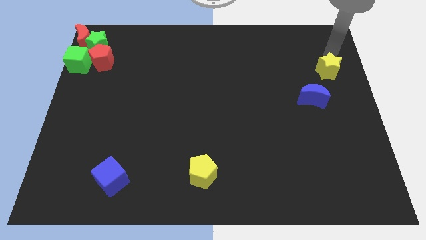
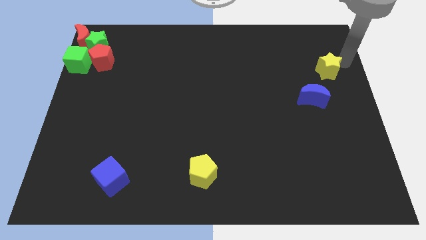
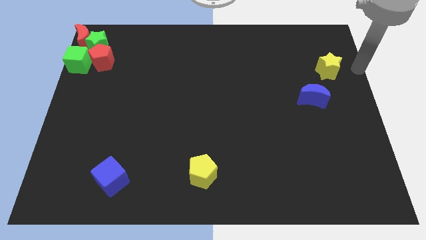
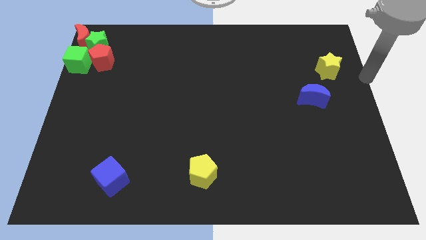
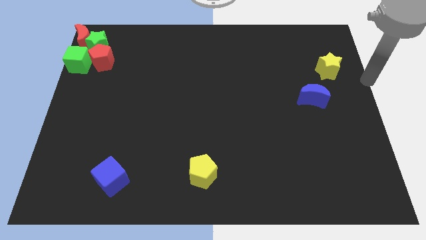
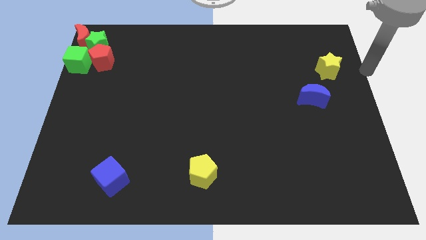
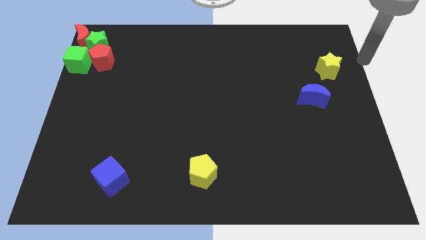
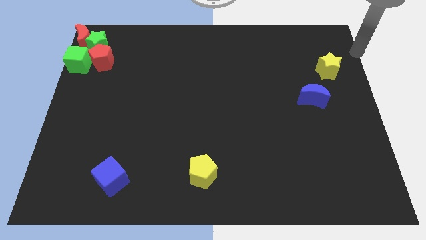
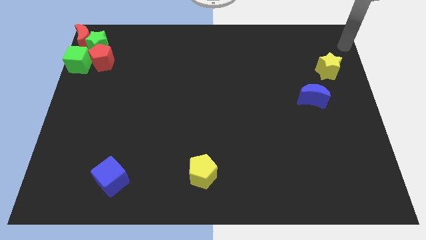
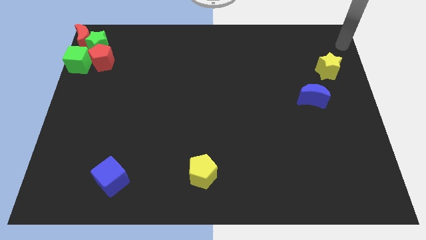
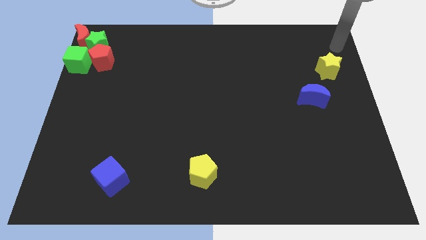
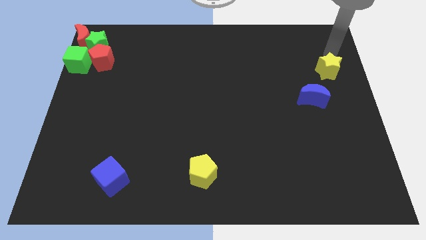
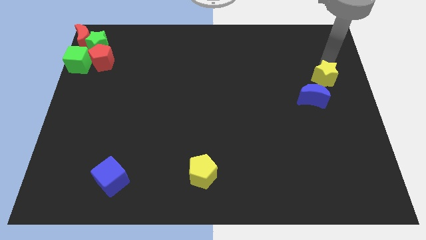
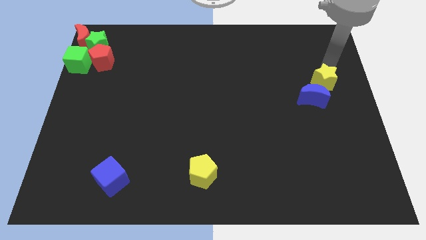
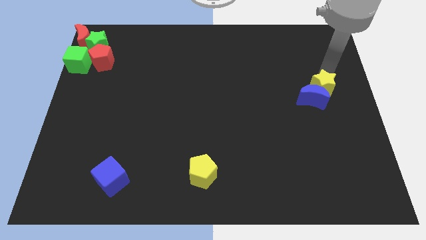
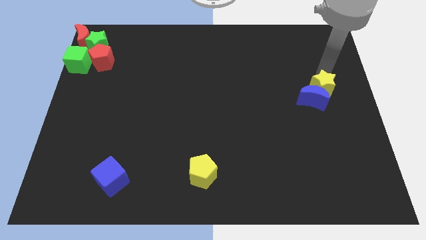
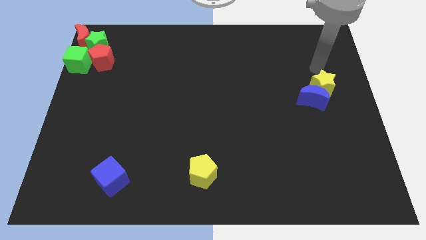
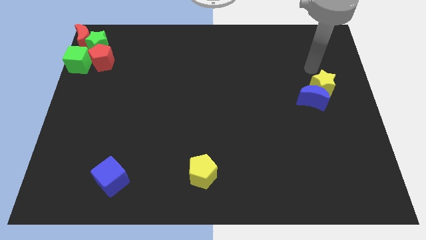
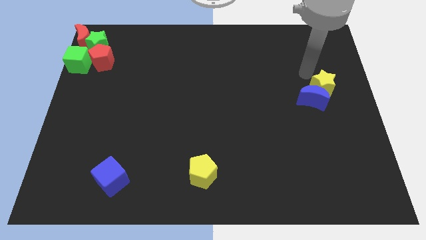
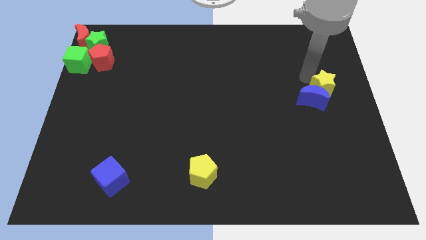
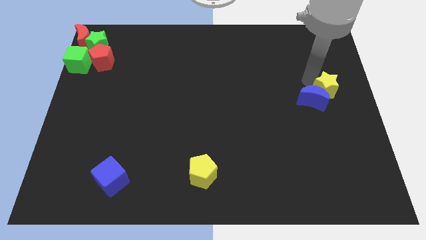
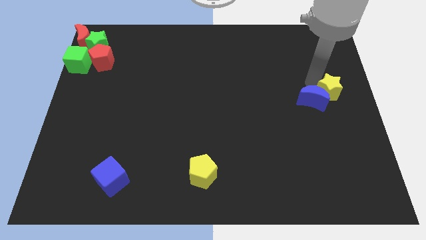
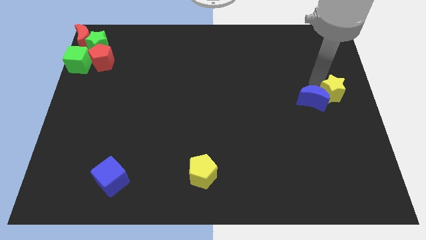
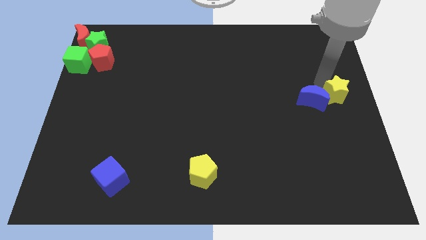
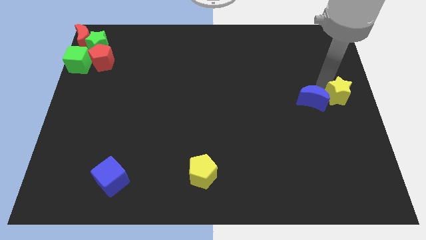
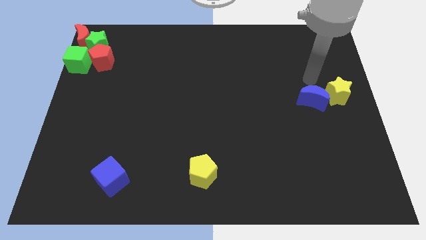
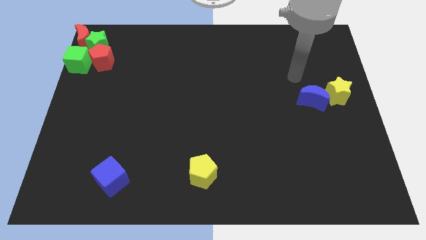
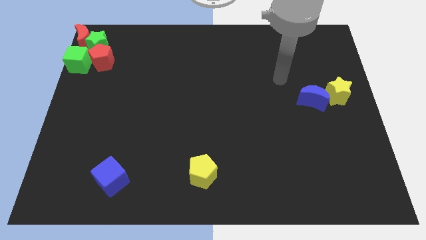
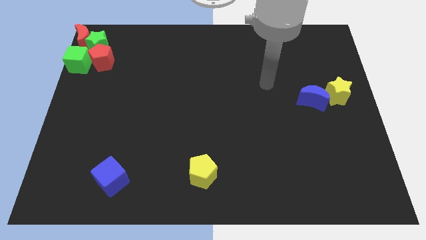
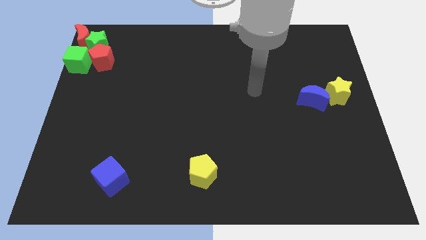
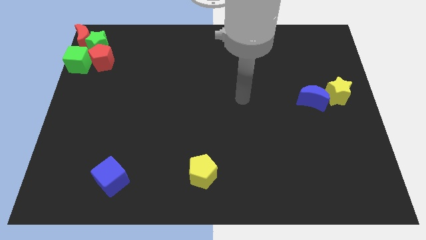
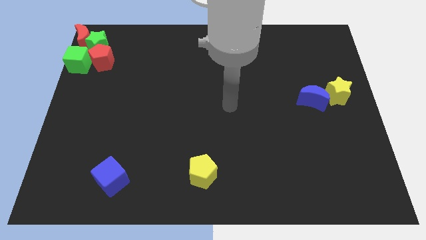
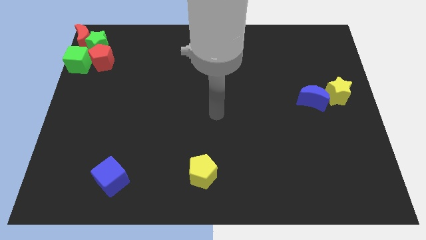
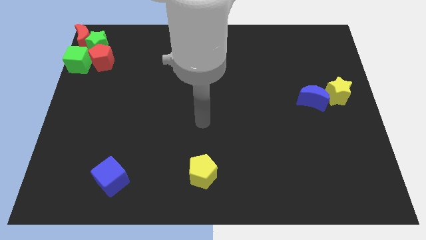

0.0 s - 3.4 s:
move the yellow star right to the blue crescent

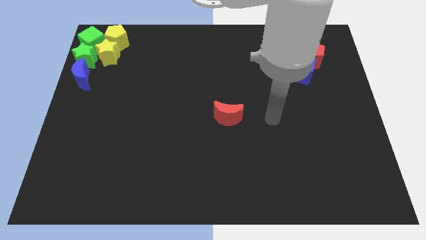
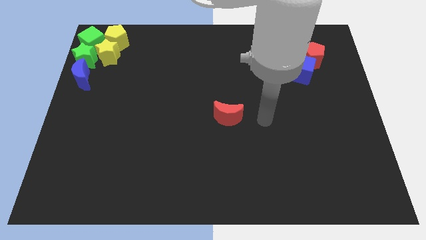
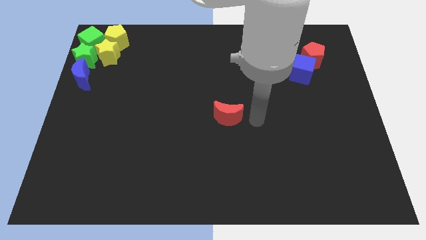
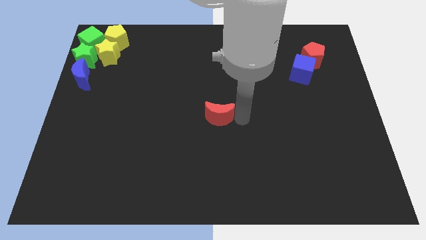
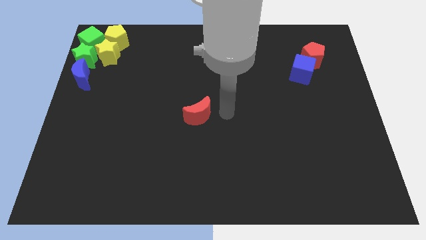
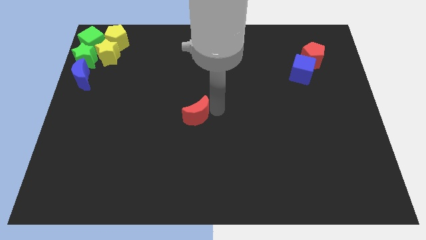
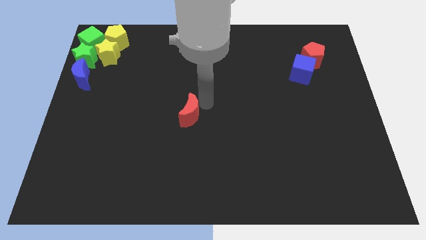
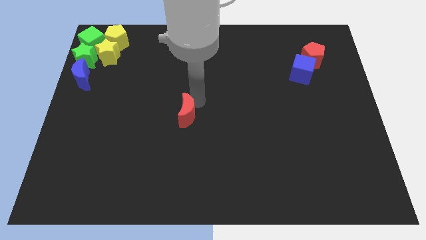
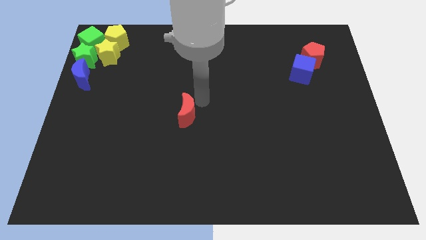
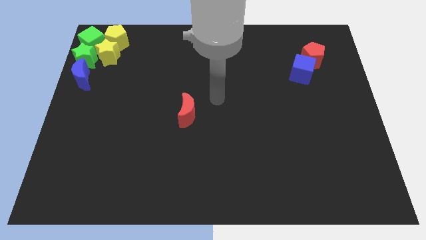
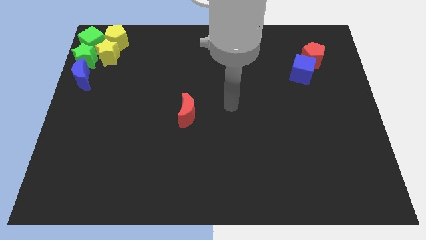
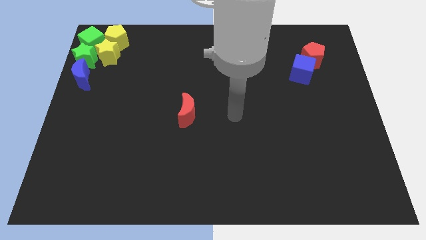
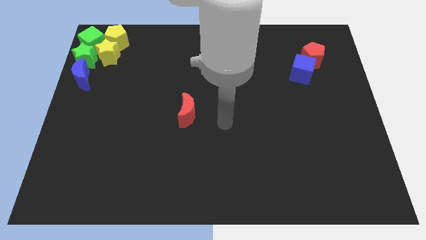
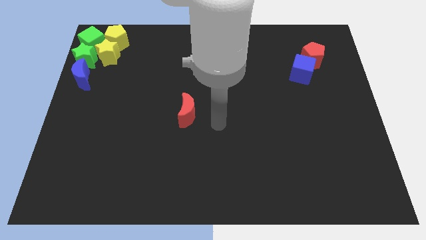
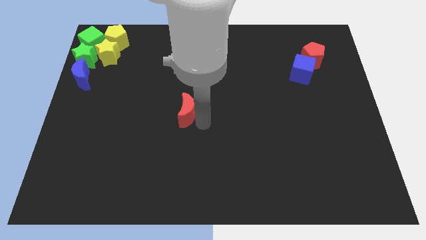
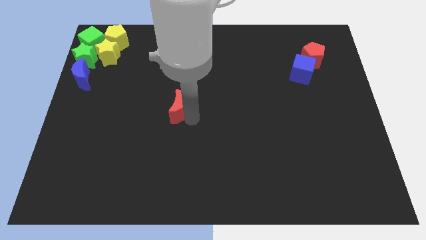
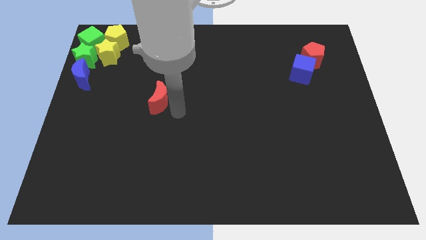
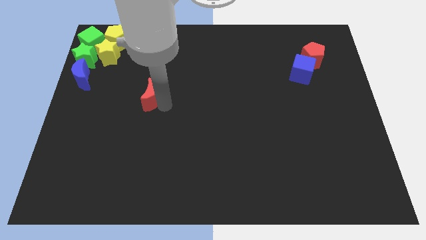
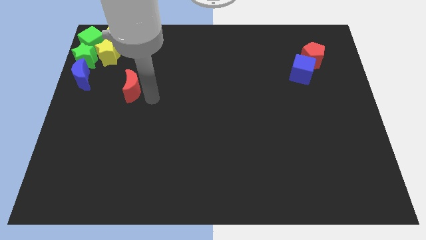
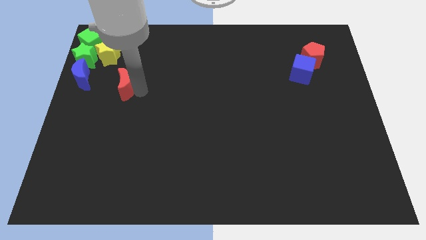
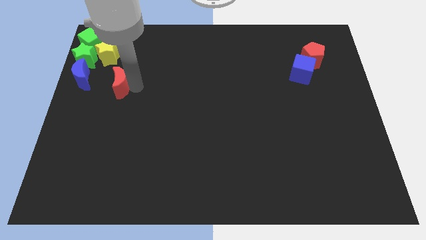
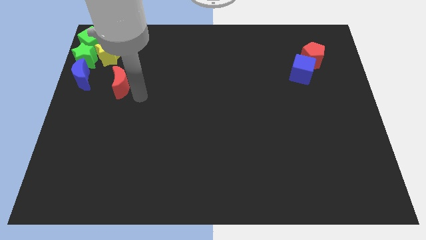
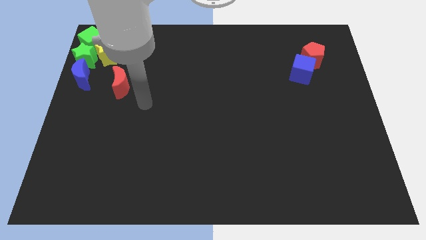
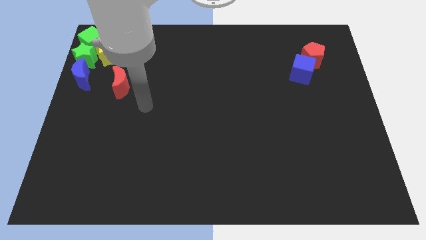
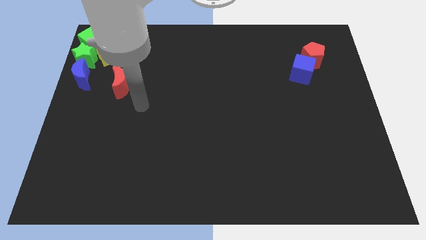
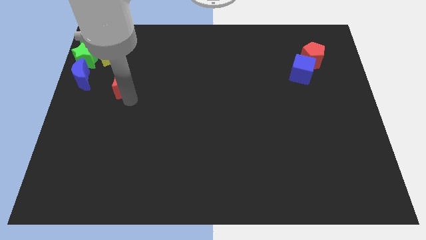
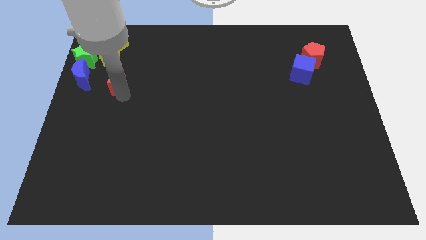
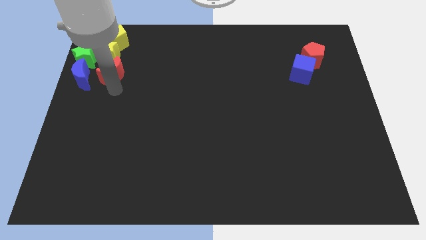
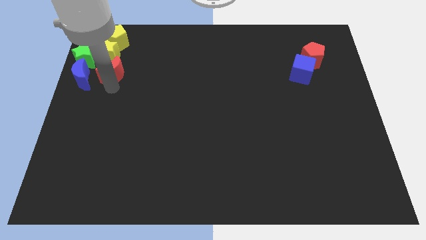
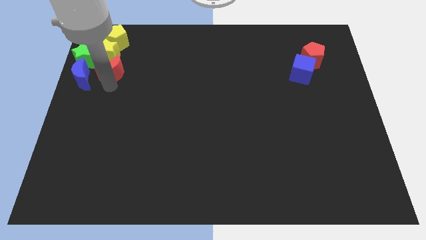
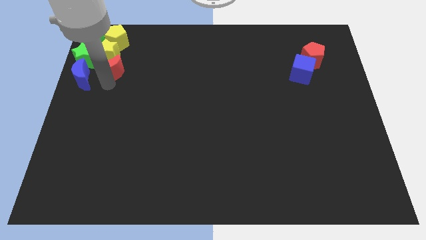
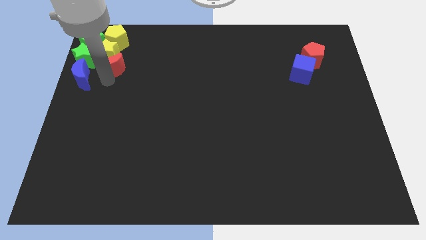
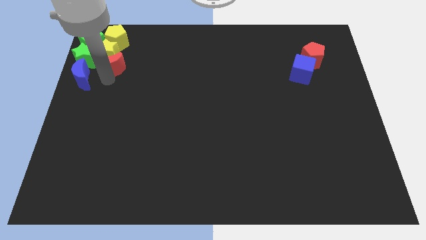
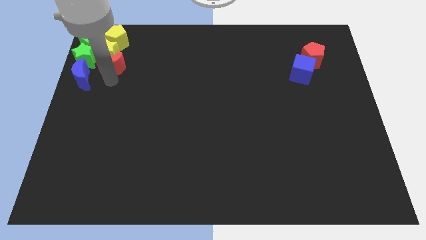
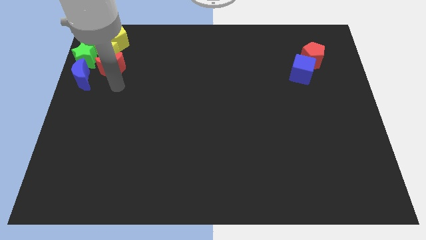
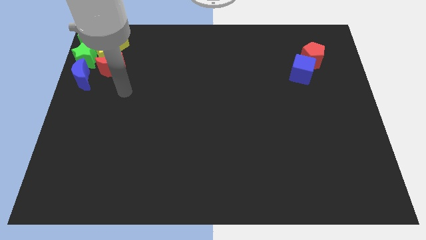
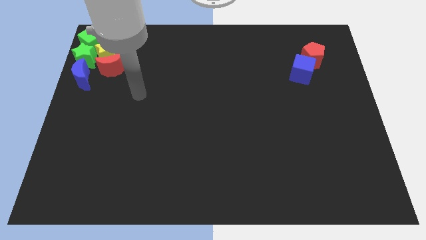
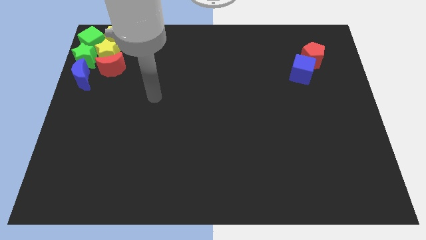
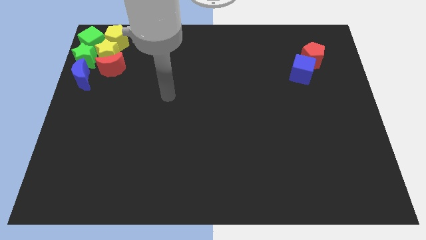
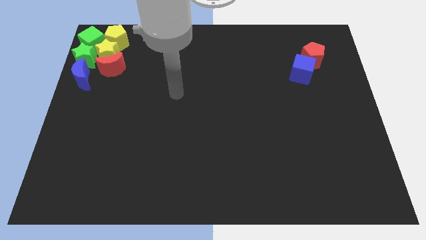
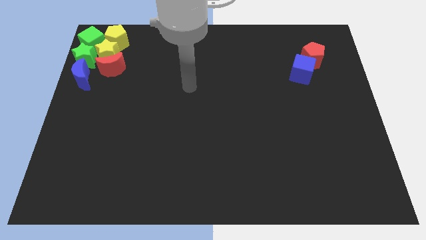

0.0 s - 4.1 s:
push the red crescent into the group of blocks

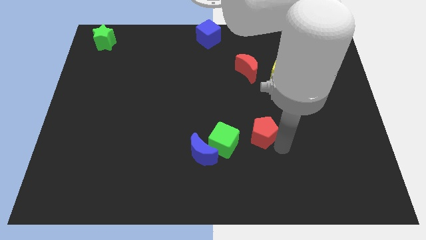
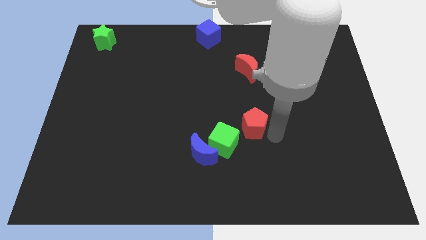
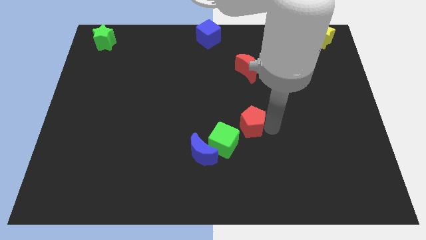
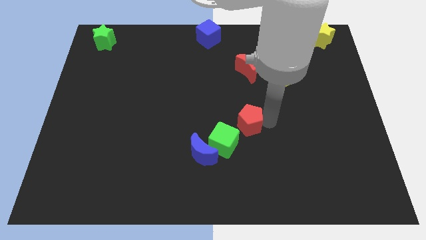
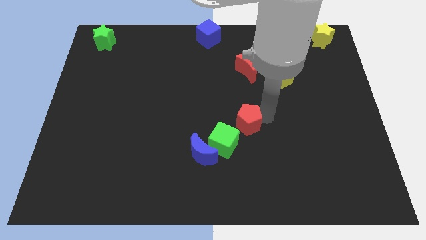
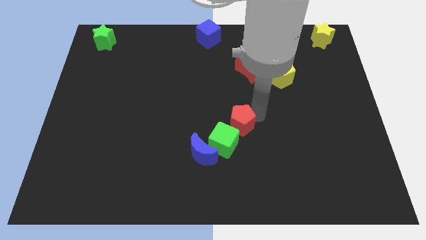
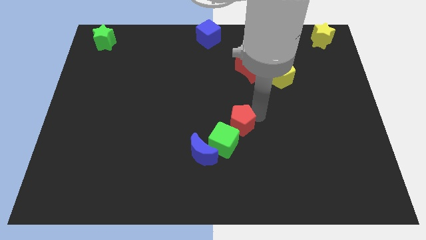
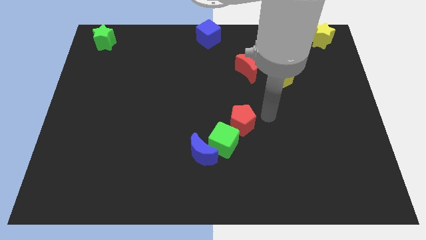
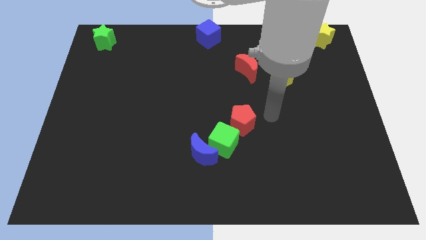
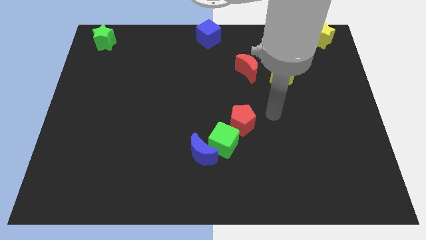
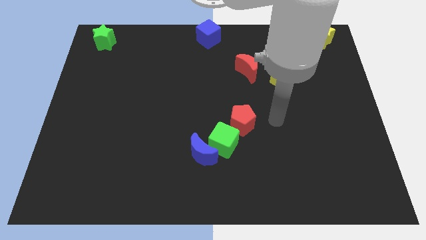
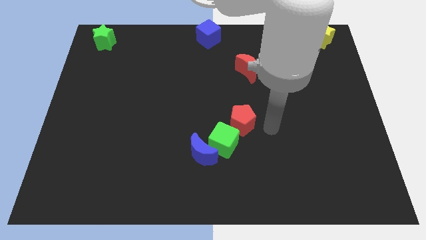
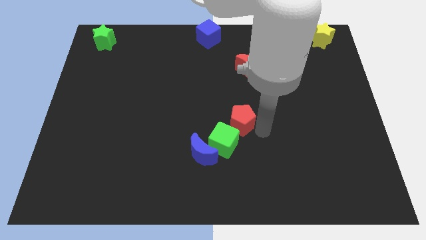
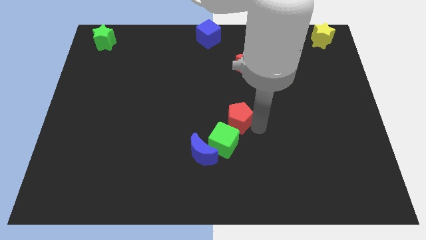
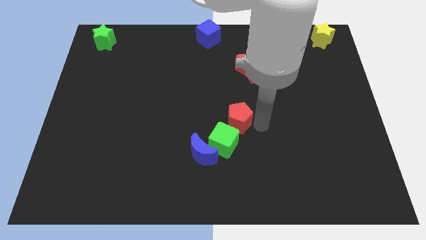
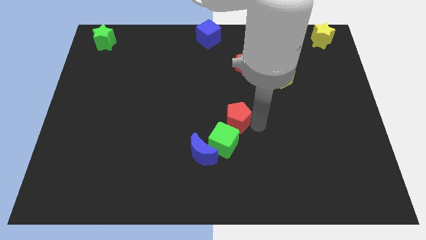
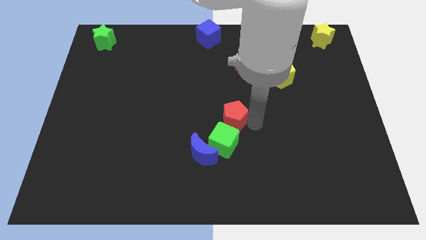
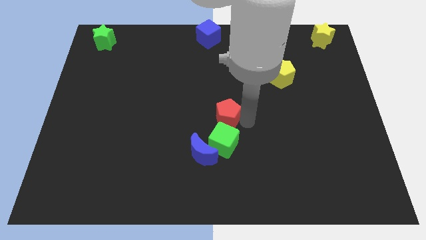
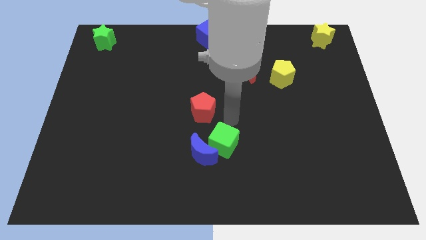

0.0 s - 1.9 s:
slide the red pentagon vertically above the blue moon
